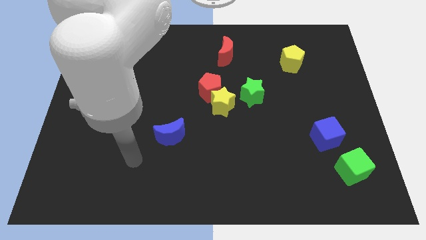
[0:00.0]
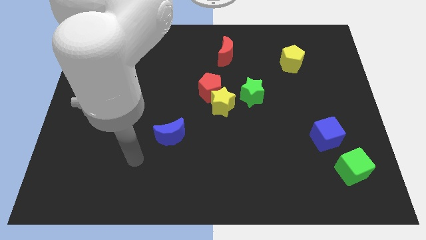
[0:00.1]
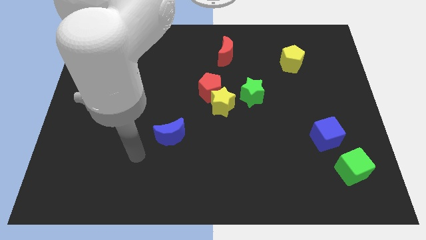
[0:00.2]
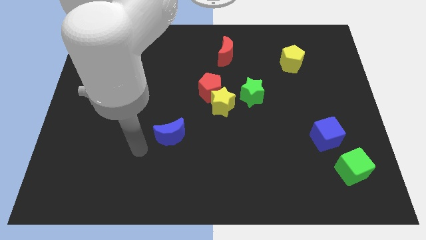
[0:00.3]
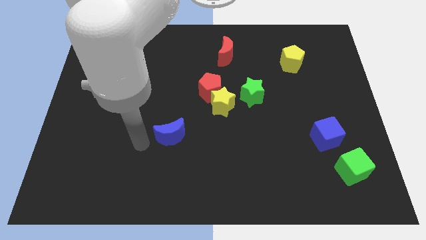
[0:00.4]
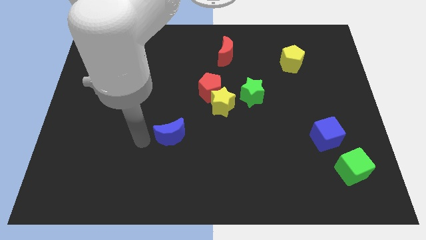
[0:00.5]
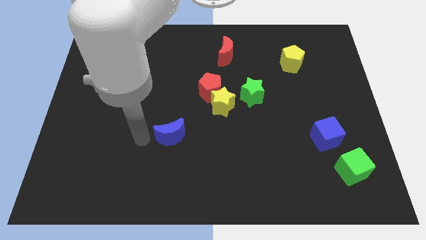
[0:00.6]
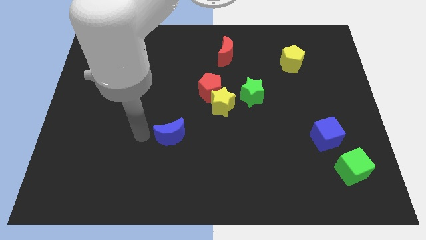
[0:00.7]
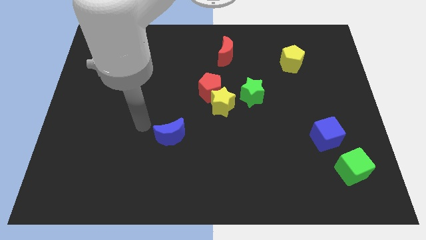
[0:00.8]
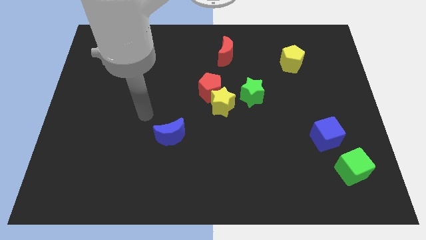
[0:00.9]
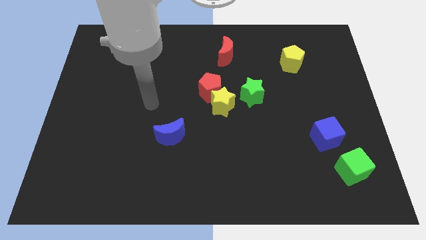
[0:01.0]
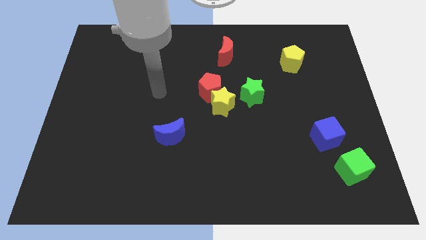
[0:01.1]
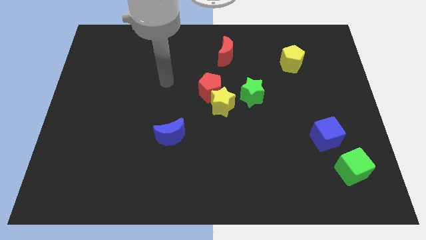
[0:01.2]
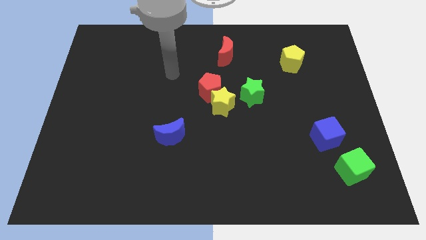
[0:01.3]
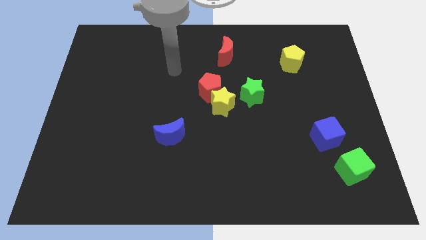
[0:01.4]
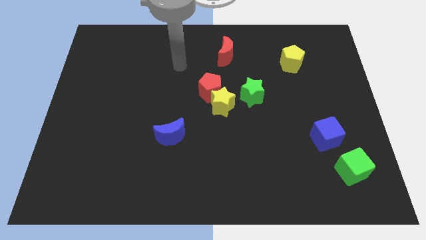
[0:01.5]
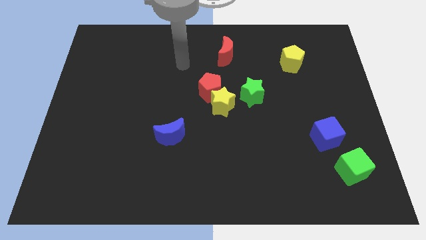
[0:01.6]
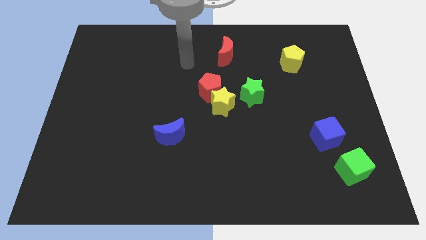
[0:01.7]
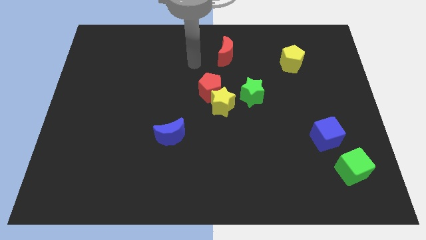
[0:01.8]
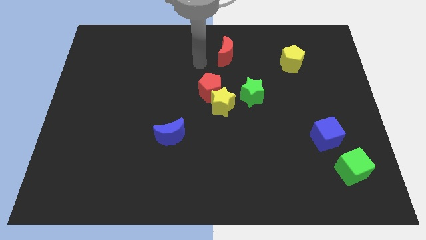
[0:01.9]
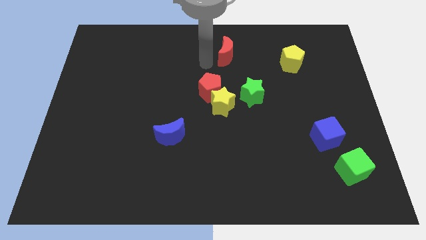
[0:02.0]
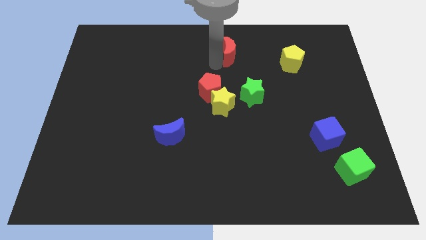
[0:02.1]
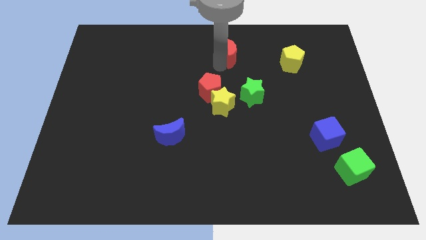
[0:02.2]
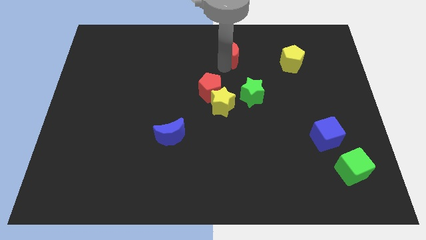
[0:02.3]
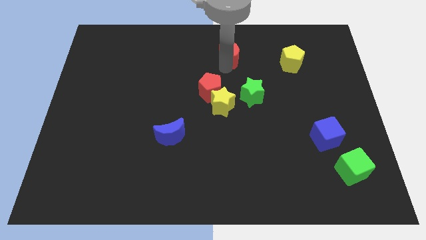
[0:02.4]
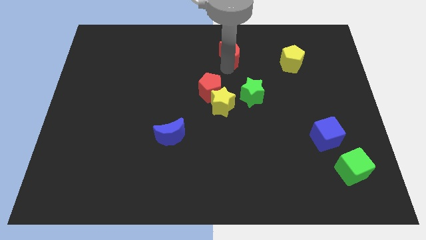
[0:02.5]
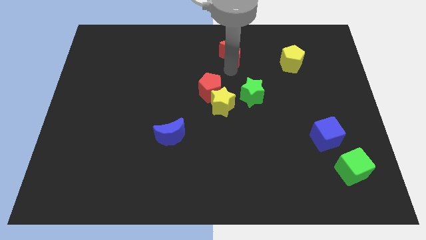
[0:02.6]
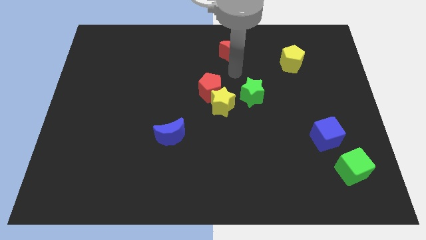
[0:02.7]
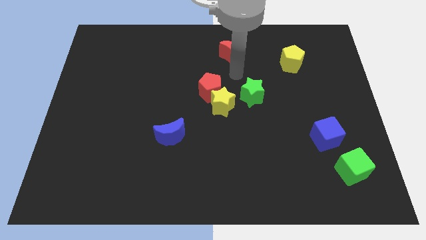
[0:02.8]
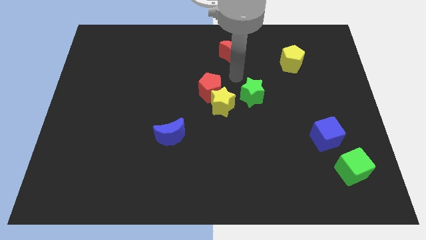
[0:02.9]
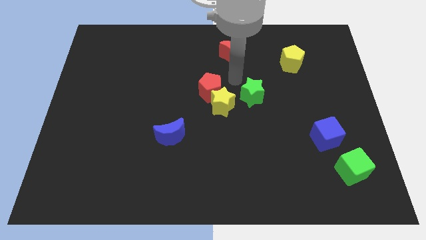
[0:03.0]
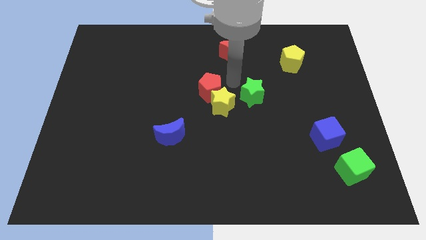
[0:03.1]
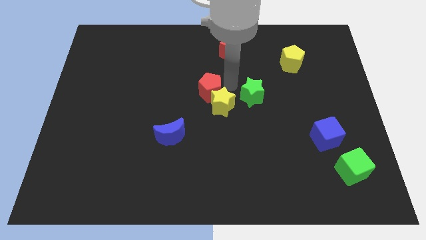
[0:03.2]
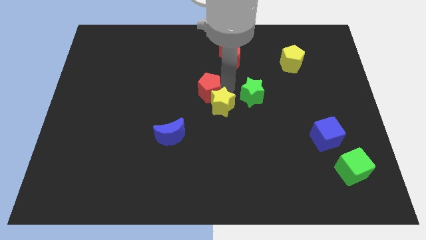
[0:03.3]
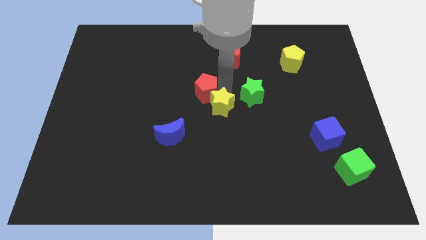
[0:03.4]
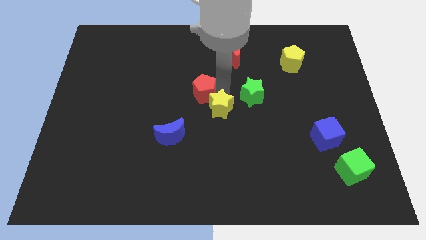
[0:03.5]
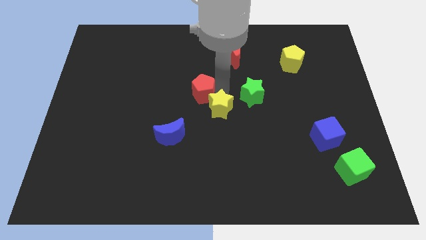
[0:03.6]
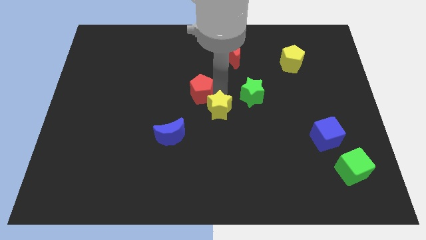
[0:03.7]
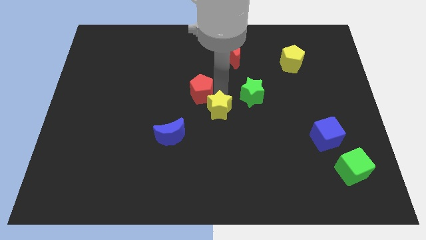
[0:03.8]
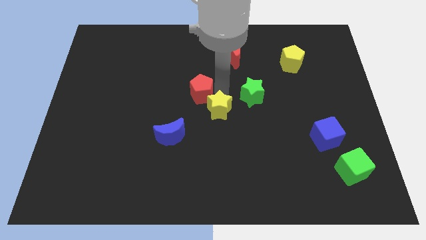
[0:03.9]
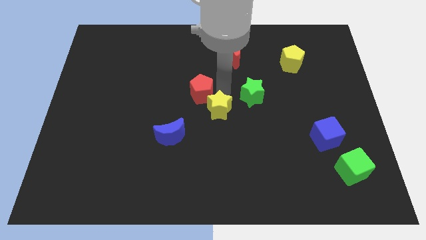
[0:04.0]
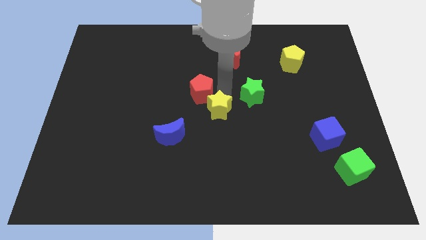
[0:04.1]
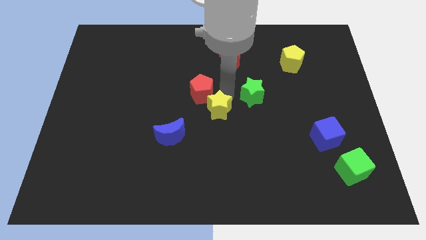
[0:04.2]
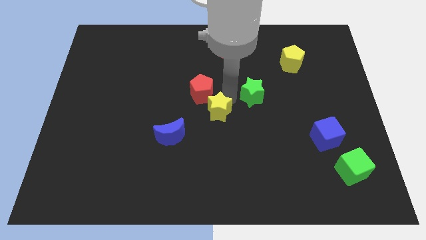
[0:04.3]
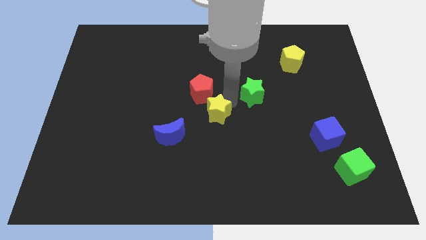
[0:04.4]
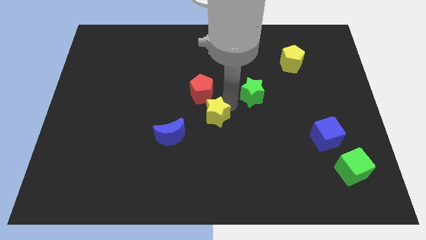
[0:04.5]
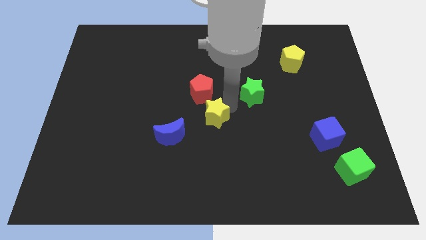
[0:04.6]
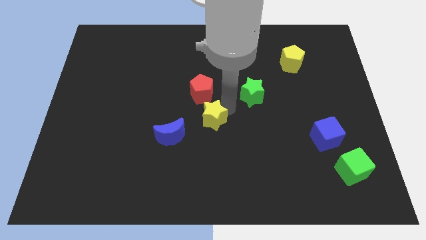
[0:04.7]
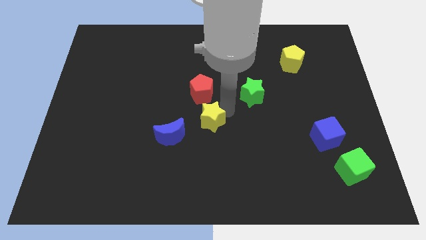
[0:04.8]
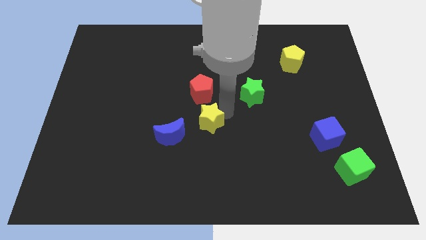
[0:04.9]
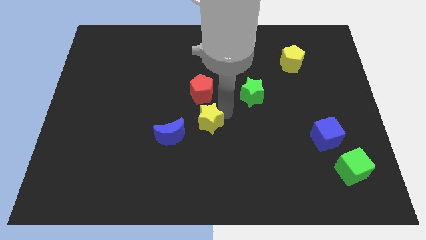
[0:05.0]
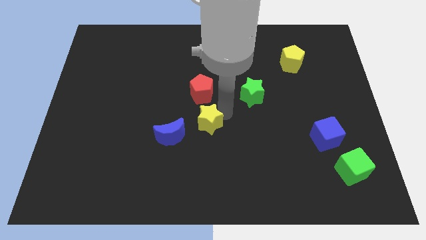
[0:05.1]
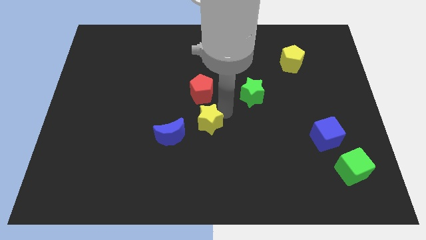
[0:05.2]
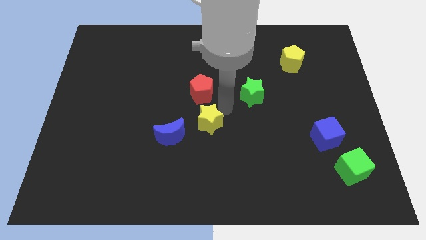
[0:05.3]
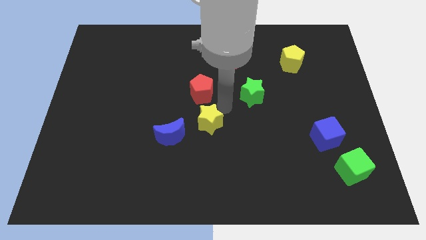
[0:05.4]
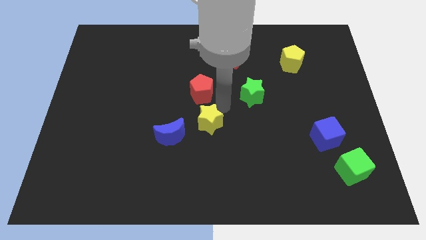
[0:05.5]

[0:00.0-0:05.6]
push the yellow star to the right of the blue crescent

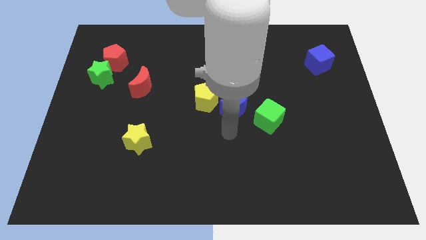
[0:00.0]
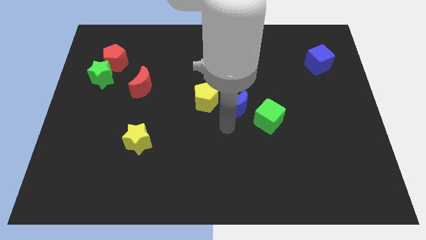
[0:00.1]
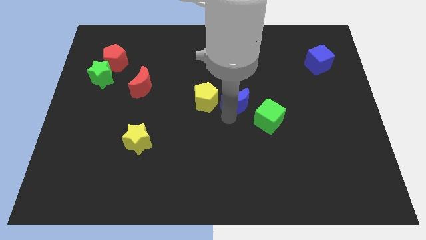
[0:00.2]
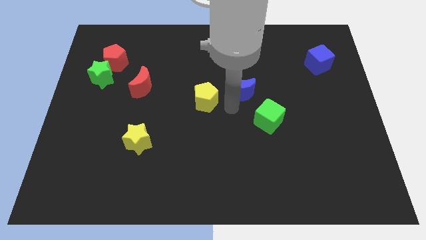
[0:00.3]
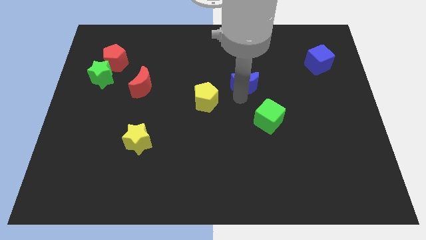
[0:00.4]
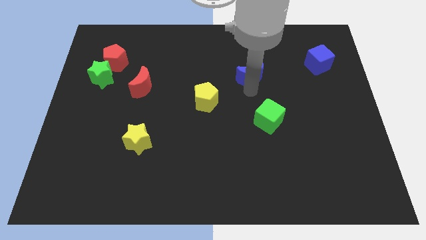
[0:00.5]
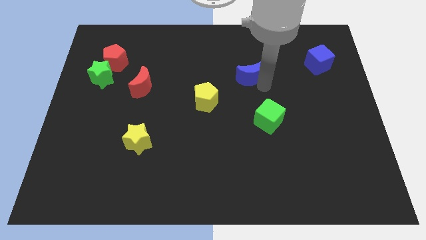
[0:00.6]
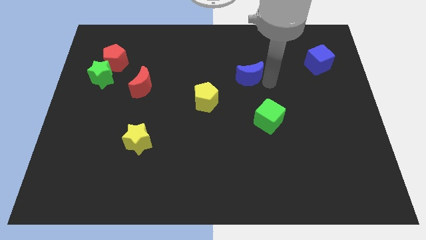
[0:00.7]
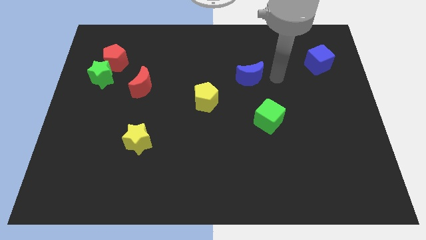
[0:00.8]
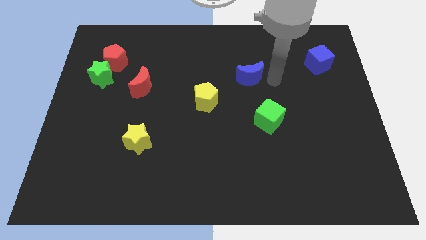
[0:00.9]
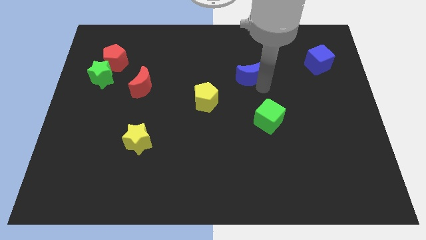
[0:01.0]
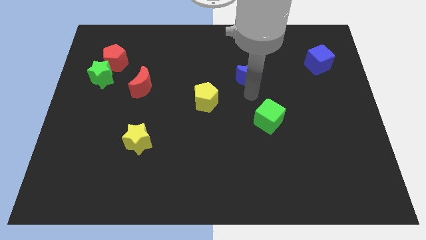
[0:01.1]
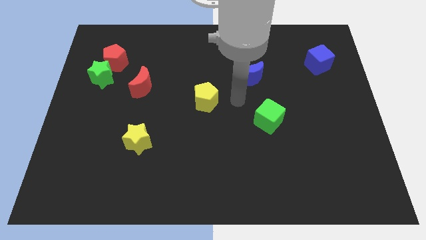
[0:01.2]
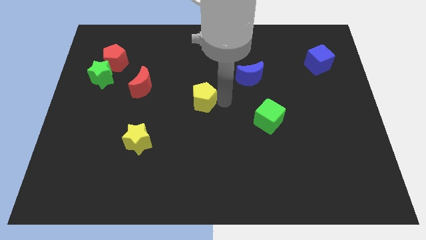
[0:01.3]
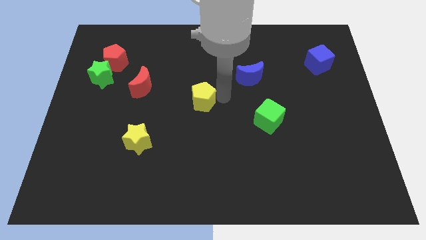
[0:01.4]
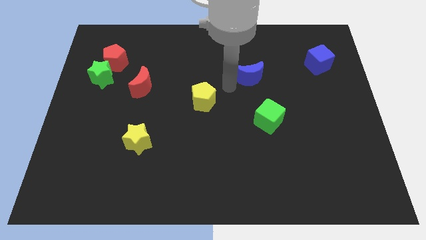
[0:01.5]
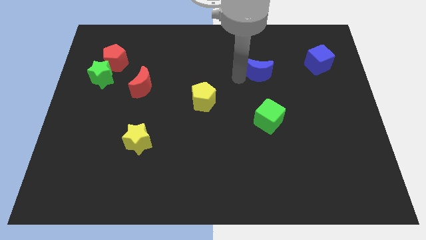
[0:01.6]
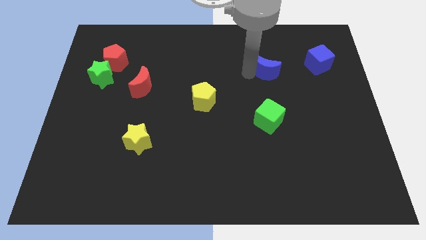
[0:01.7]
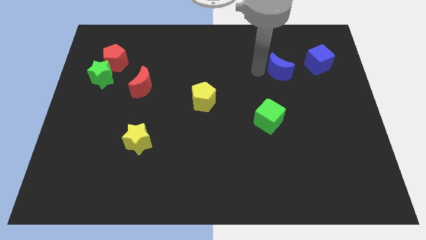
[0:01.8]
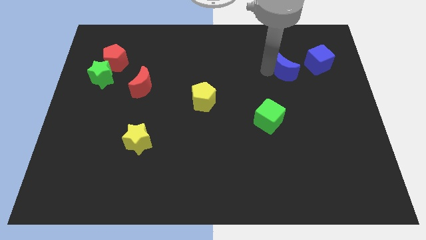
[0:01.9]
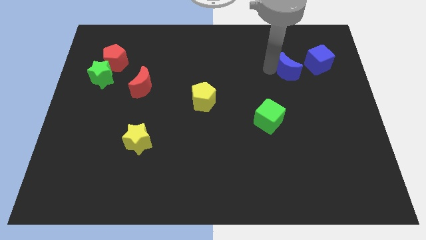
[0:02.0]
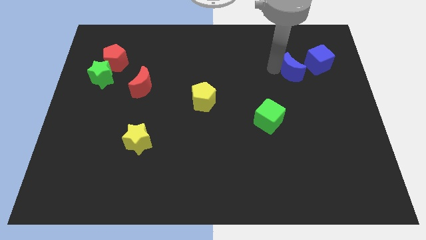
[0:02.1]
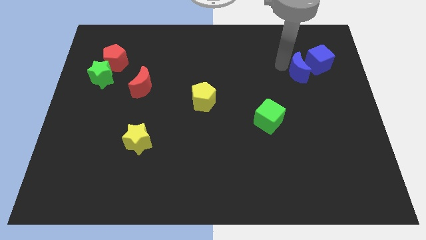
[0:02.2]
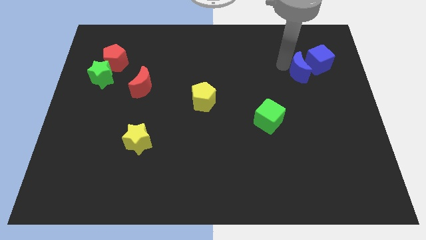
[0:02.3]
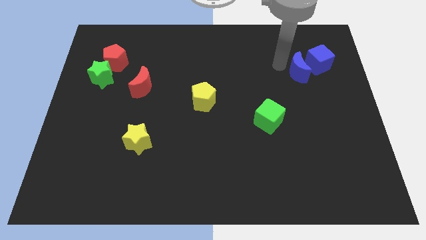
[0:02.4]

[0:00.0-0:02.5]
push the blue crescent into the blue cube at the top right

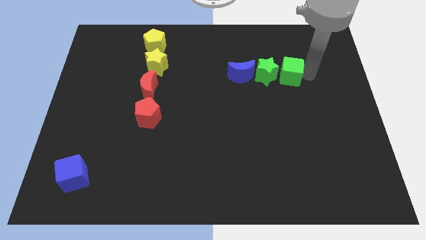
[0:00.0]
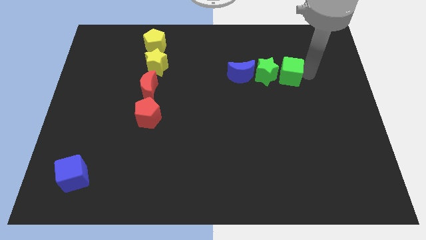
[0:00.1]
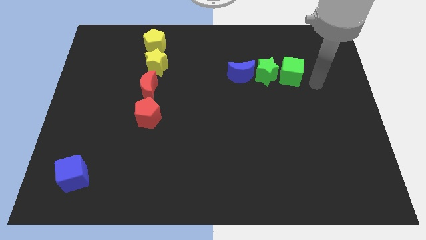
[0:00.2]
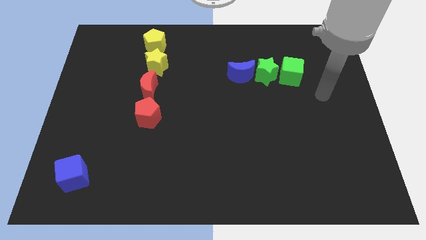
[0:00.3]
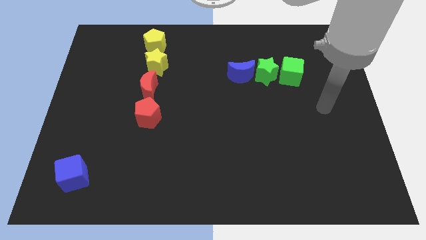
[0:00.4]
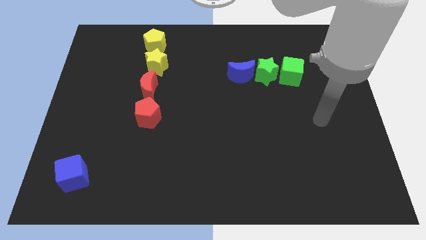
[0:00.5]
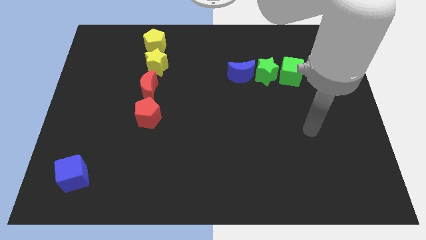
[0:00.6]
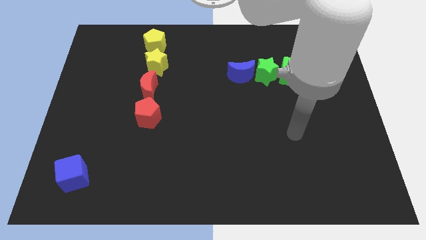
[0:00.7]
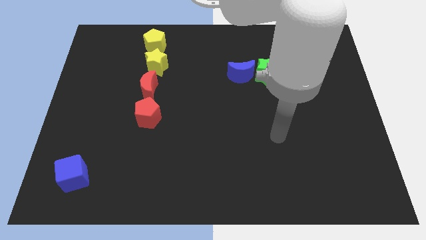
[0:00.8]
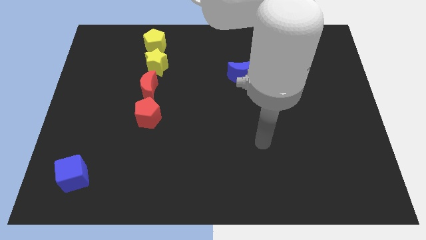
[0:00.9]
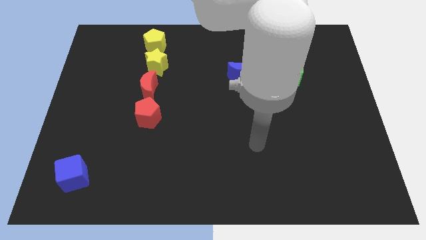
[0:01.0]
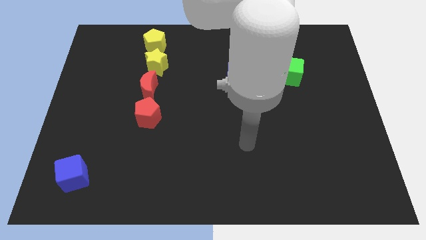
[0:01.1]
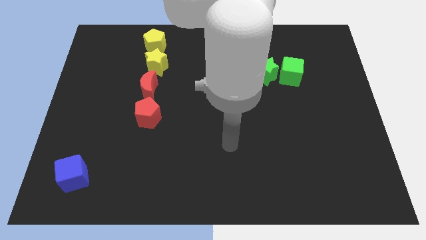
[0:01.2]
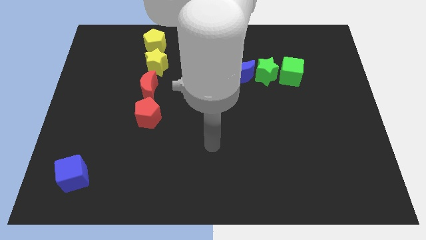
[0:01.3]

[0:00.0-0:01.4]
go away from the green cube
